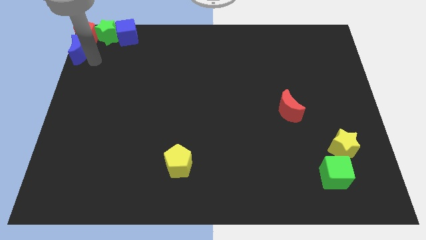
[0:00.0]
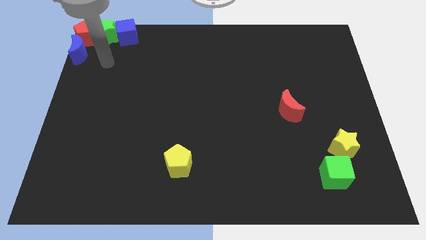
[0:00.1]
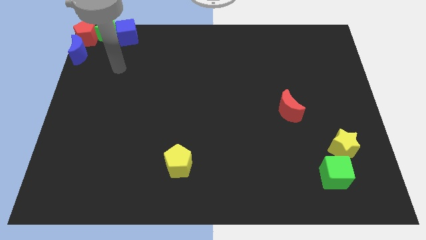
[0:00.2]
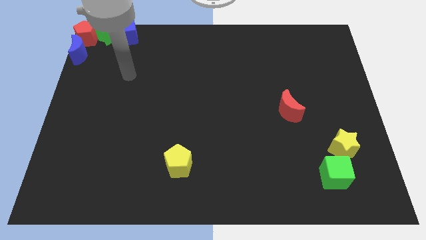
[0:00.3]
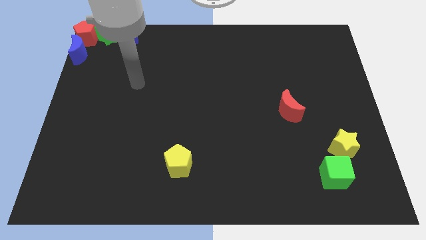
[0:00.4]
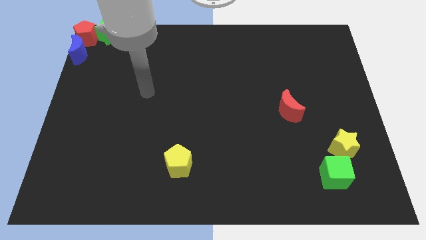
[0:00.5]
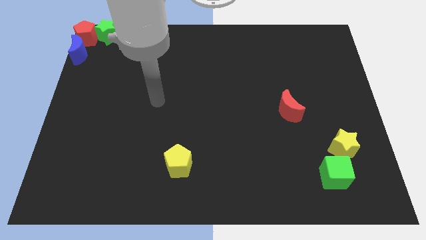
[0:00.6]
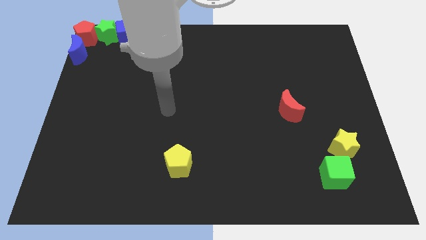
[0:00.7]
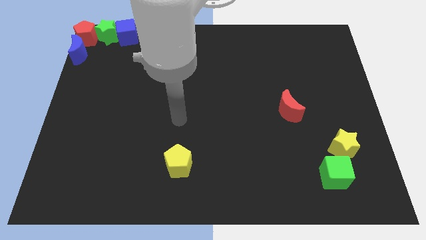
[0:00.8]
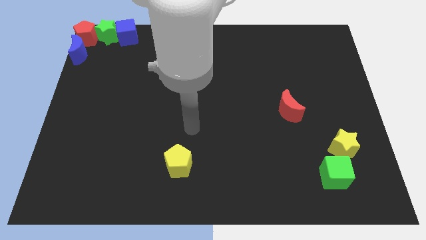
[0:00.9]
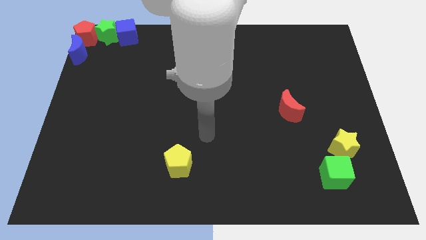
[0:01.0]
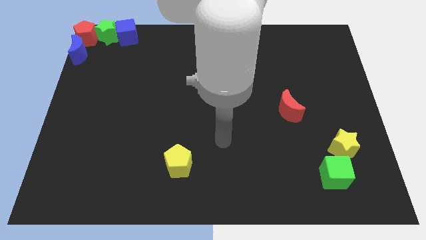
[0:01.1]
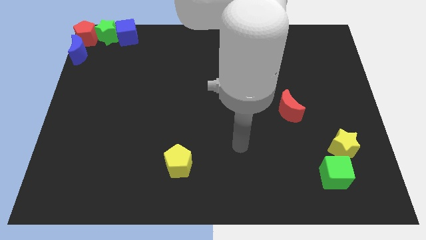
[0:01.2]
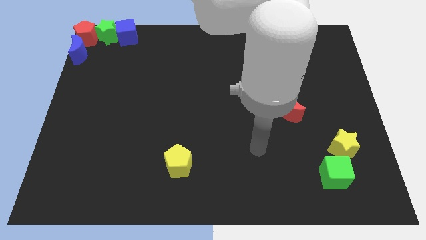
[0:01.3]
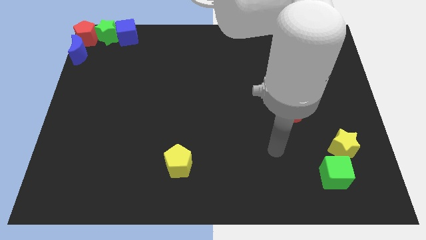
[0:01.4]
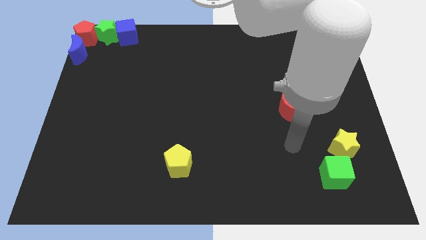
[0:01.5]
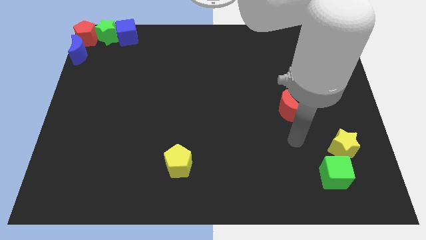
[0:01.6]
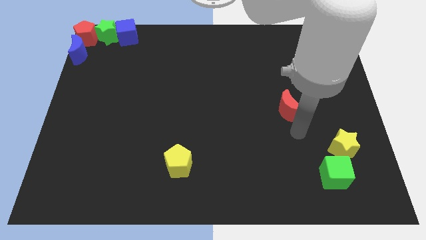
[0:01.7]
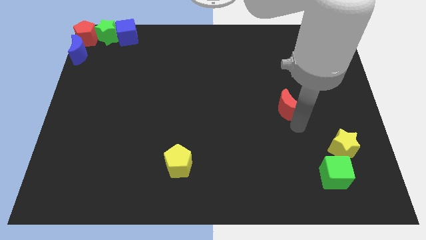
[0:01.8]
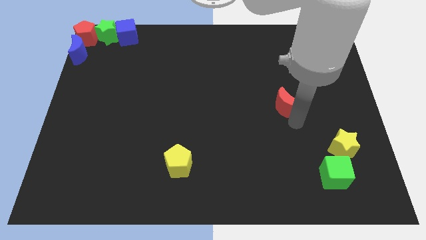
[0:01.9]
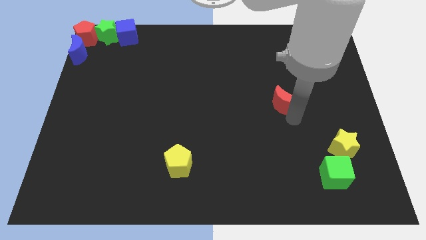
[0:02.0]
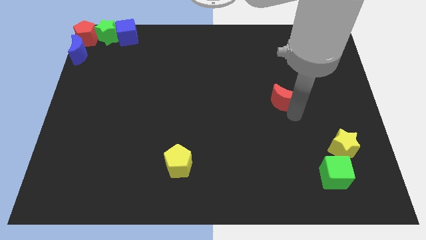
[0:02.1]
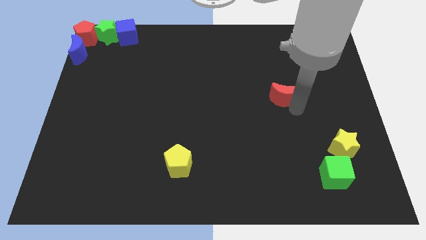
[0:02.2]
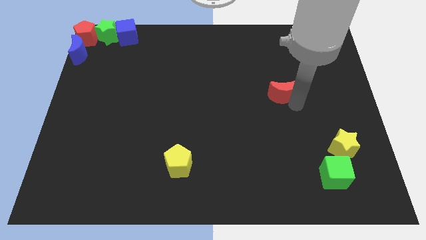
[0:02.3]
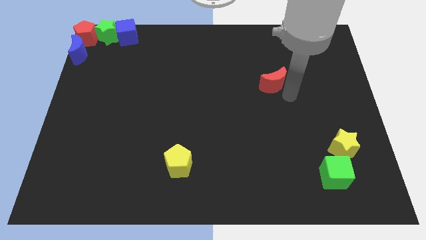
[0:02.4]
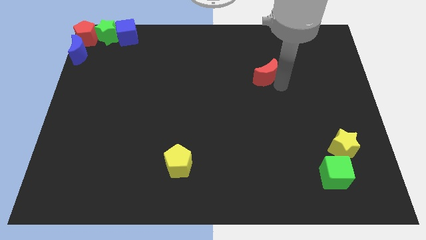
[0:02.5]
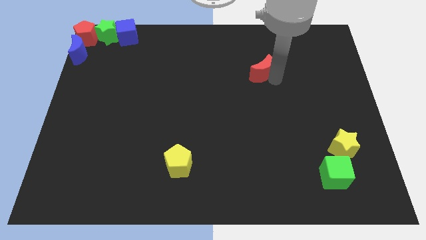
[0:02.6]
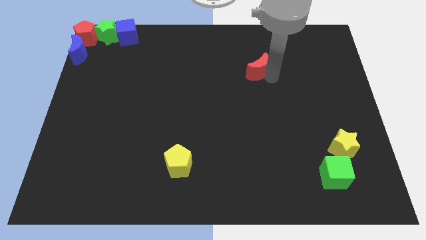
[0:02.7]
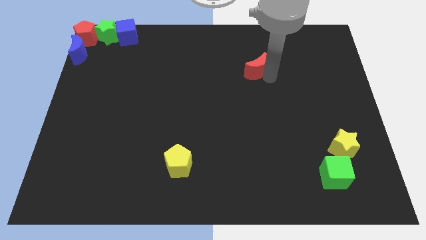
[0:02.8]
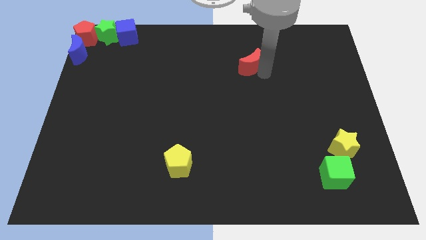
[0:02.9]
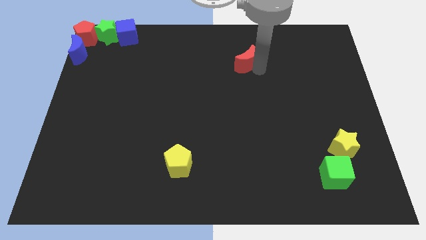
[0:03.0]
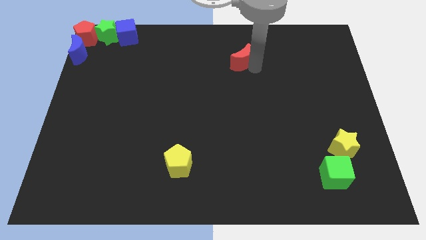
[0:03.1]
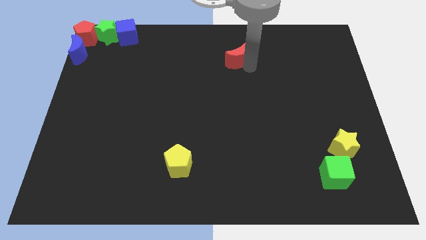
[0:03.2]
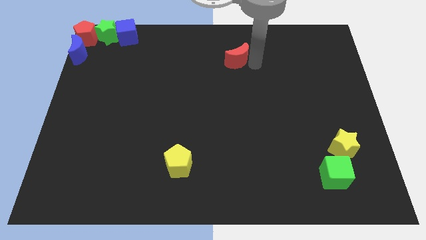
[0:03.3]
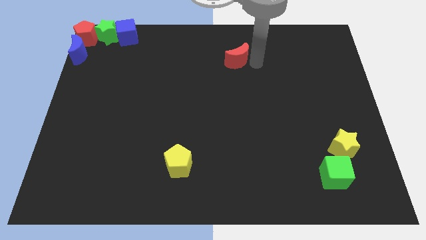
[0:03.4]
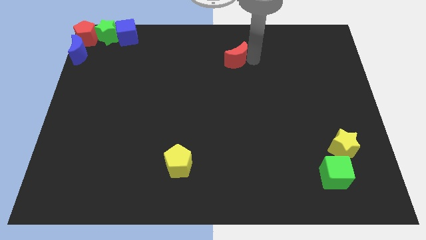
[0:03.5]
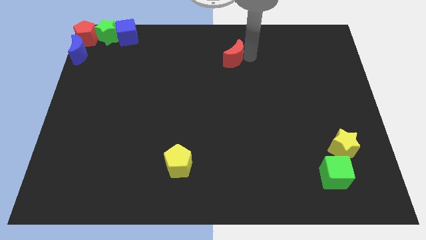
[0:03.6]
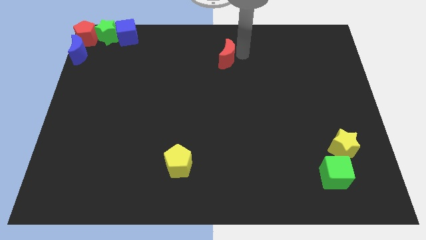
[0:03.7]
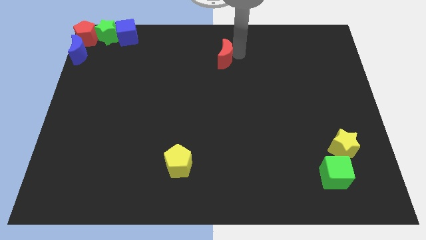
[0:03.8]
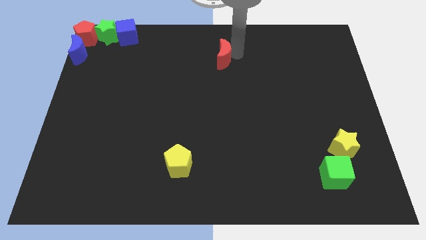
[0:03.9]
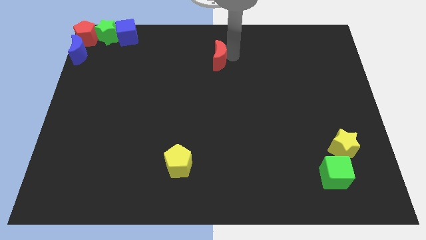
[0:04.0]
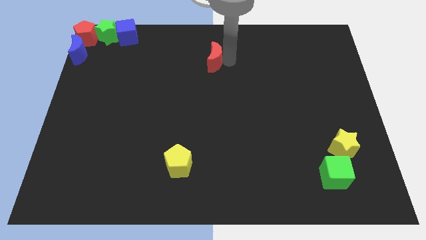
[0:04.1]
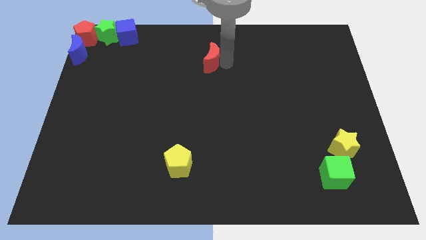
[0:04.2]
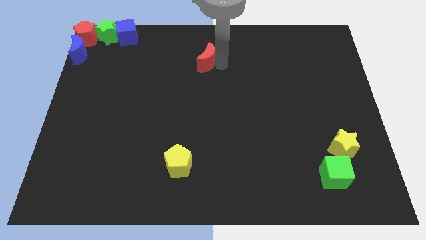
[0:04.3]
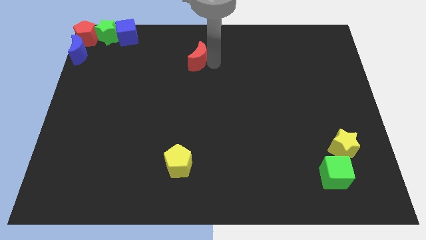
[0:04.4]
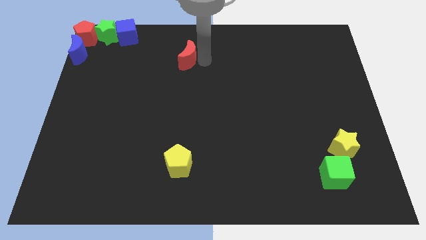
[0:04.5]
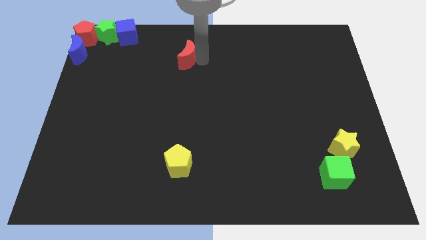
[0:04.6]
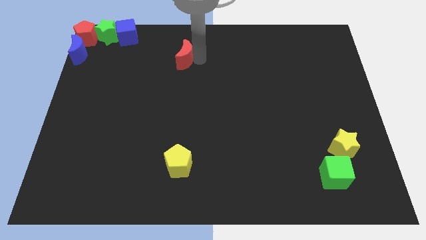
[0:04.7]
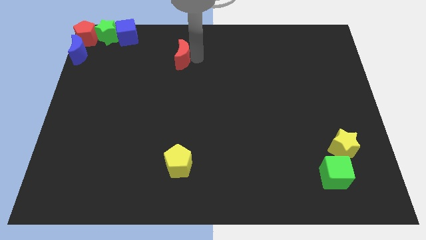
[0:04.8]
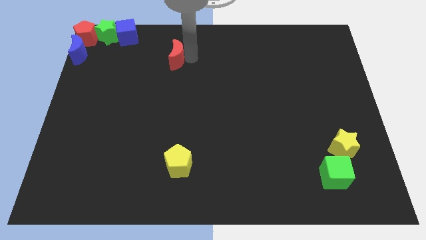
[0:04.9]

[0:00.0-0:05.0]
move the red crescent towards the group of blocks at the top left of the table
